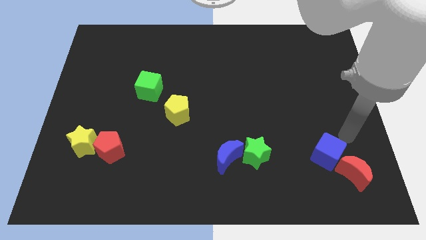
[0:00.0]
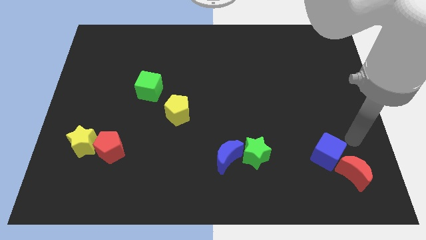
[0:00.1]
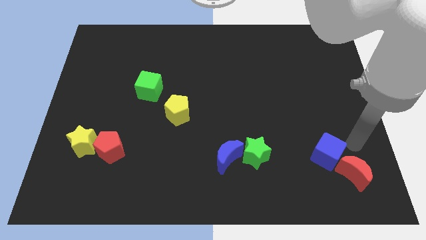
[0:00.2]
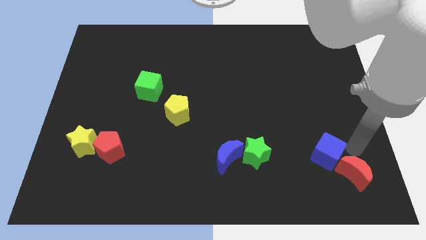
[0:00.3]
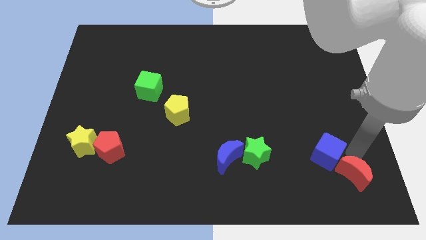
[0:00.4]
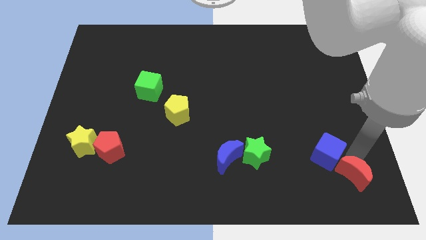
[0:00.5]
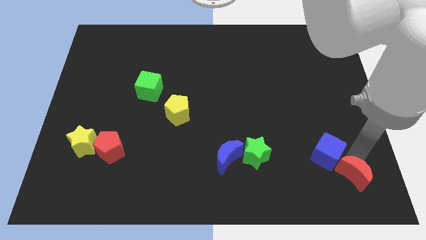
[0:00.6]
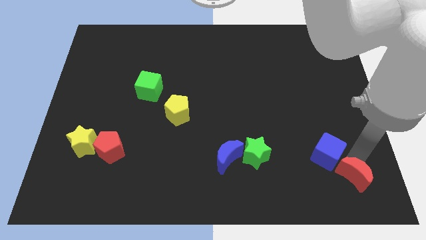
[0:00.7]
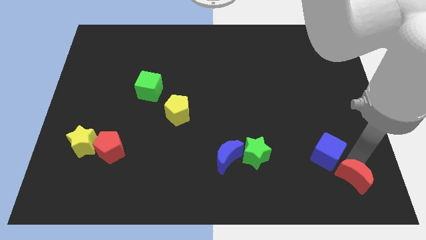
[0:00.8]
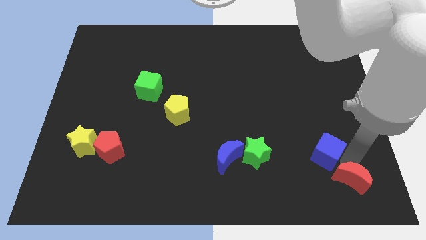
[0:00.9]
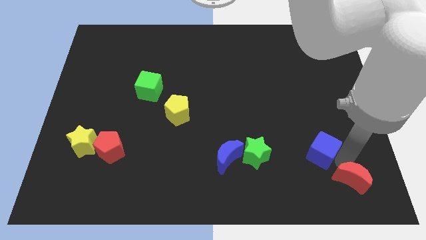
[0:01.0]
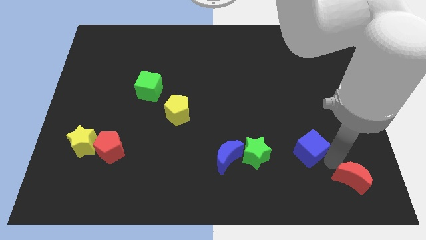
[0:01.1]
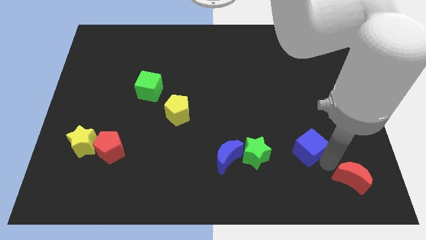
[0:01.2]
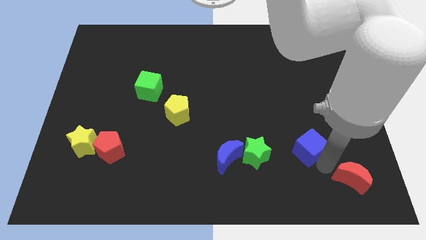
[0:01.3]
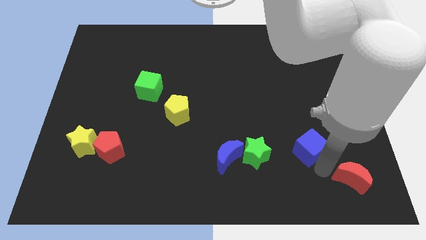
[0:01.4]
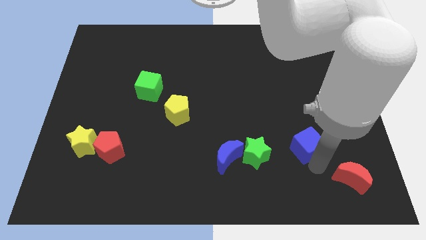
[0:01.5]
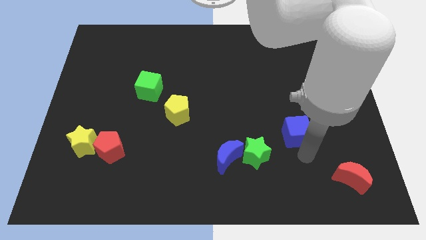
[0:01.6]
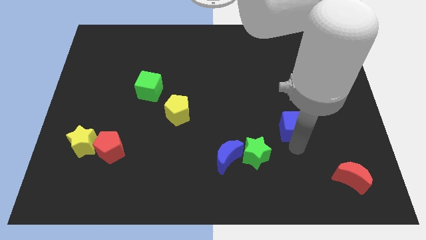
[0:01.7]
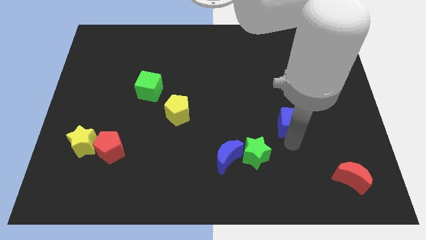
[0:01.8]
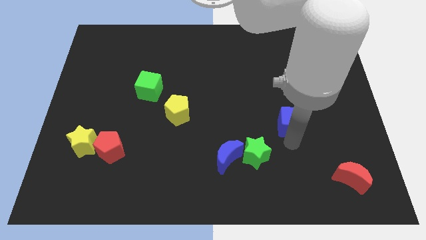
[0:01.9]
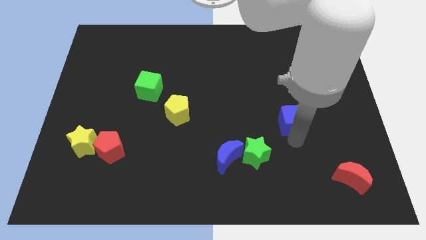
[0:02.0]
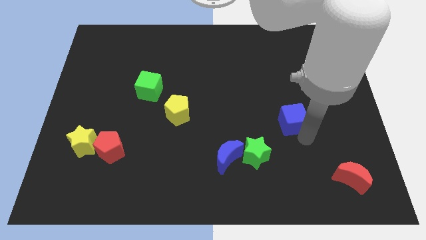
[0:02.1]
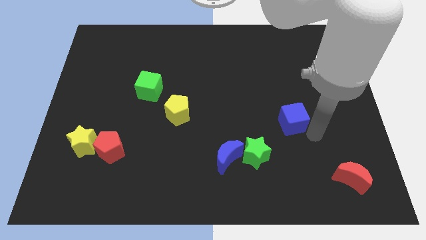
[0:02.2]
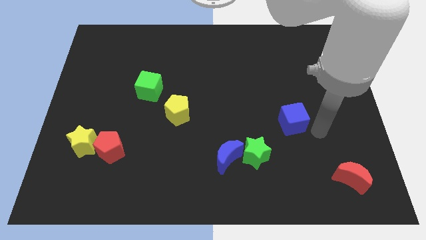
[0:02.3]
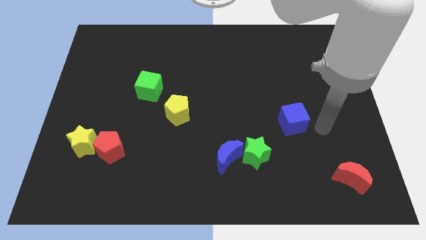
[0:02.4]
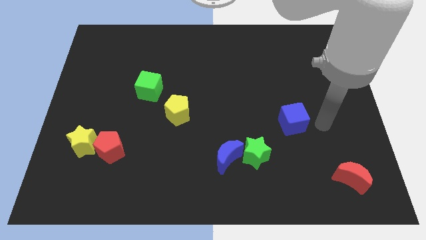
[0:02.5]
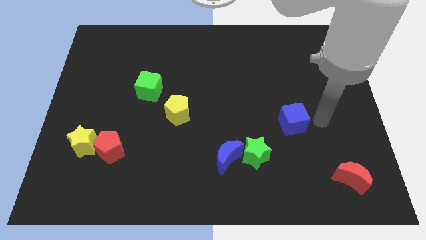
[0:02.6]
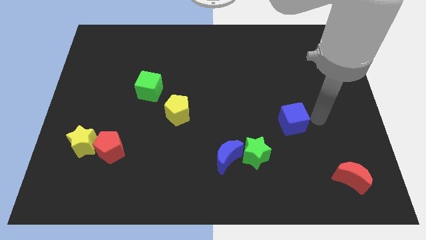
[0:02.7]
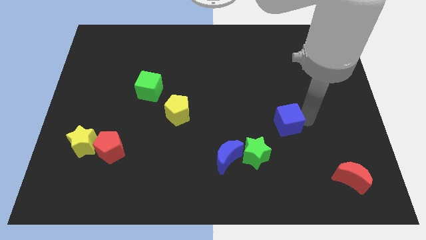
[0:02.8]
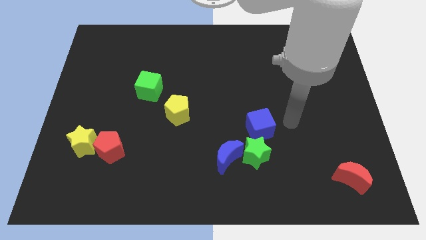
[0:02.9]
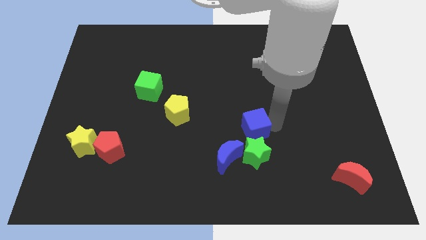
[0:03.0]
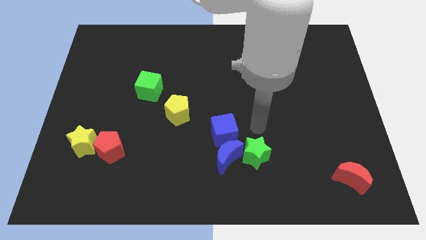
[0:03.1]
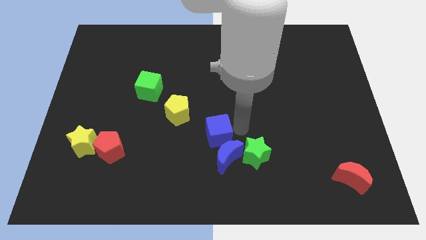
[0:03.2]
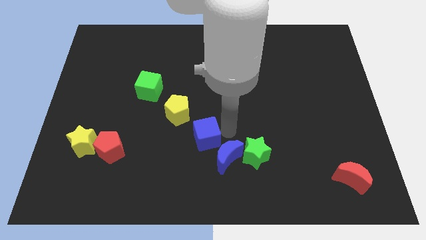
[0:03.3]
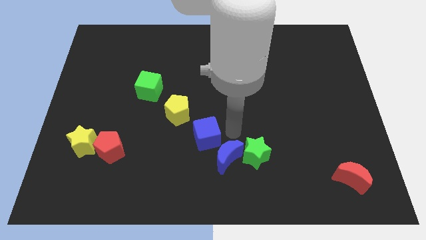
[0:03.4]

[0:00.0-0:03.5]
place the blue cube in between the yellow pentagon and blue moon

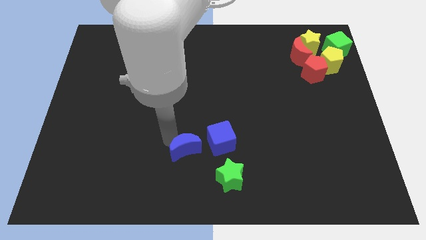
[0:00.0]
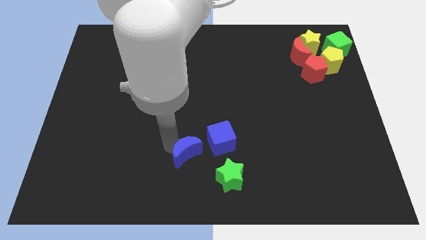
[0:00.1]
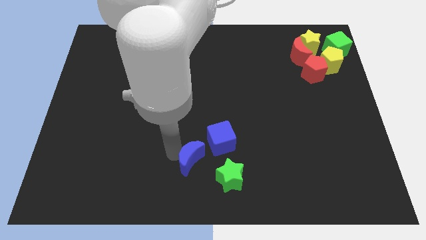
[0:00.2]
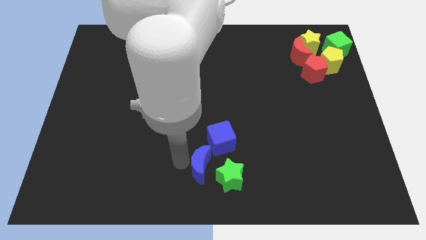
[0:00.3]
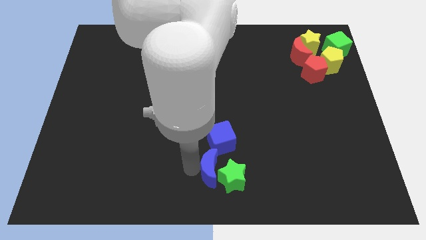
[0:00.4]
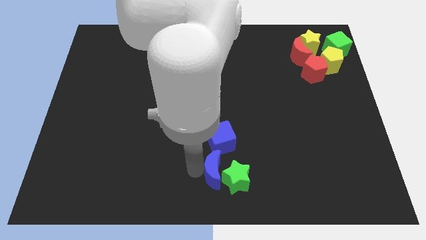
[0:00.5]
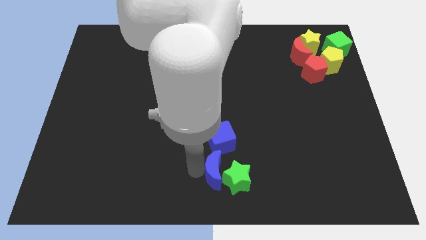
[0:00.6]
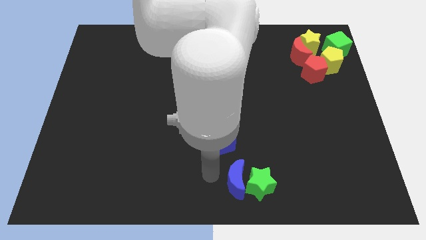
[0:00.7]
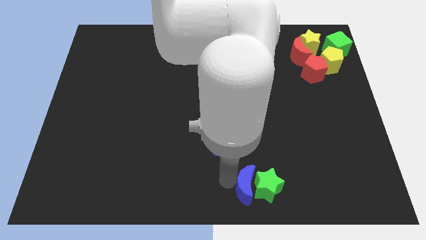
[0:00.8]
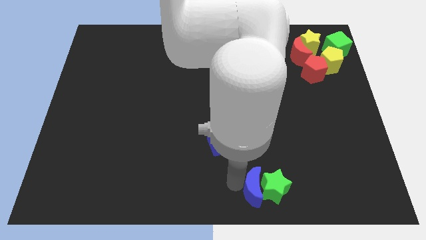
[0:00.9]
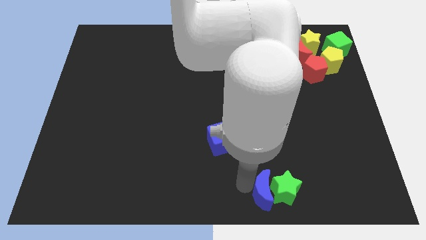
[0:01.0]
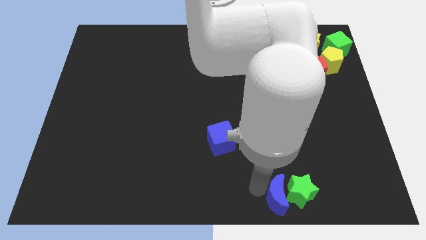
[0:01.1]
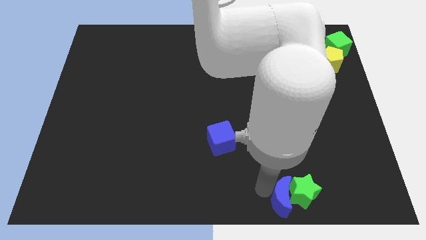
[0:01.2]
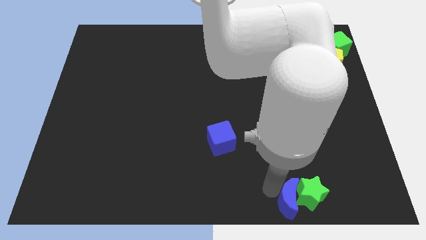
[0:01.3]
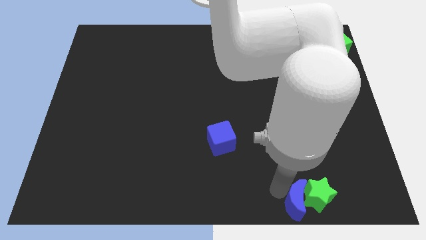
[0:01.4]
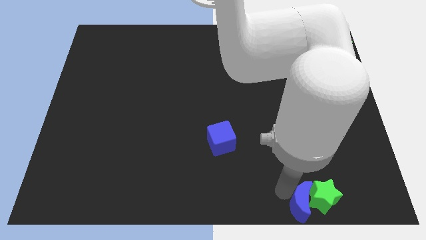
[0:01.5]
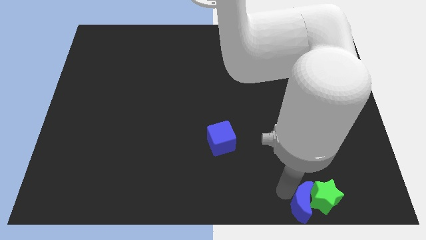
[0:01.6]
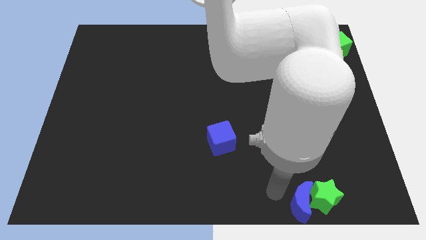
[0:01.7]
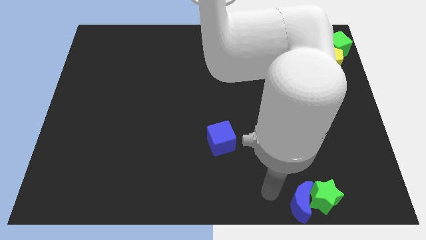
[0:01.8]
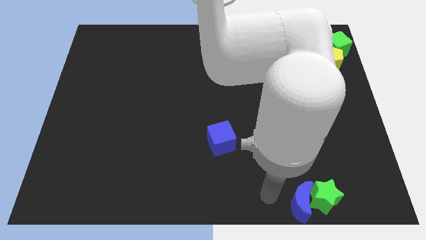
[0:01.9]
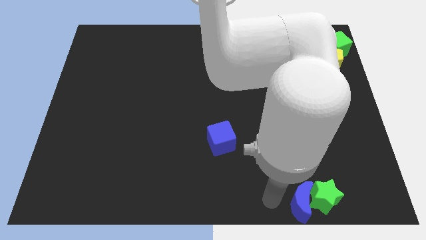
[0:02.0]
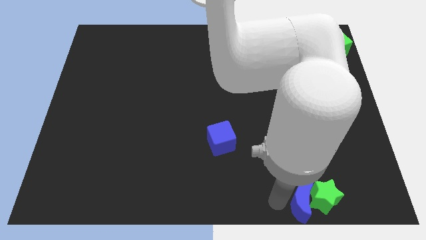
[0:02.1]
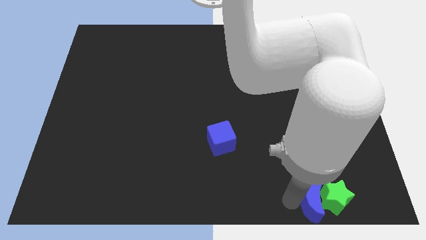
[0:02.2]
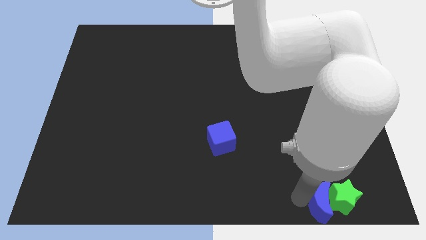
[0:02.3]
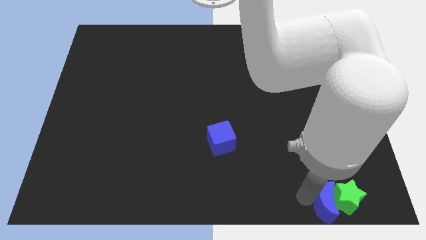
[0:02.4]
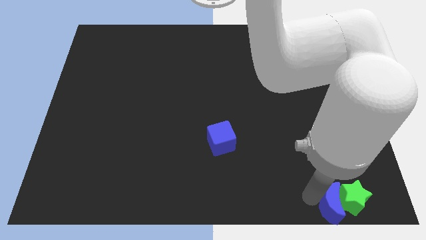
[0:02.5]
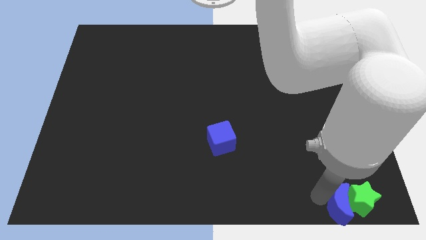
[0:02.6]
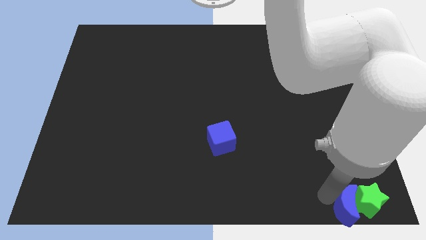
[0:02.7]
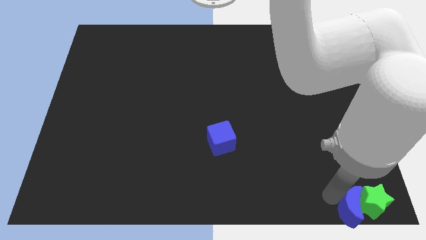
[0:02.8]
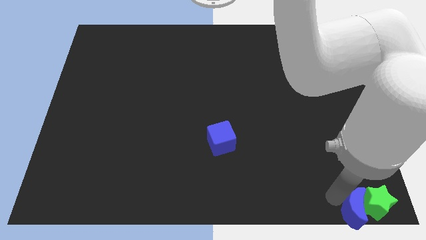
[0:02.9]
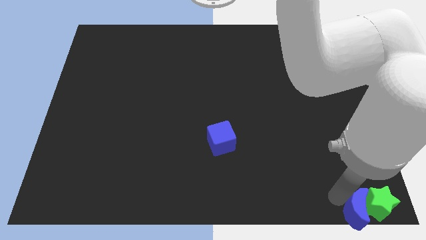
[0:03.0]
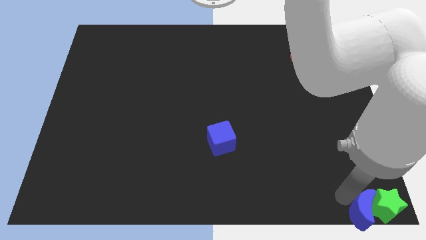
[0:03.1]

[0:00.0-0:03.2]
slide blue moon and the green star towards bottom right

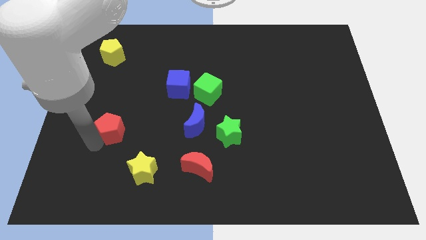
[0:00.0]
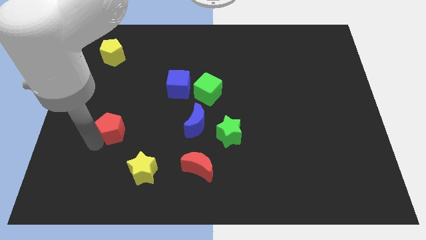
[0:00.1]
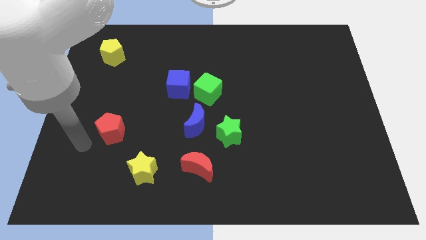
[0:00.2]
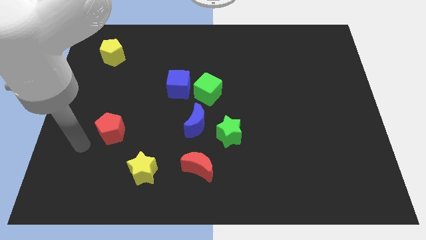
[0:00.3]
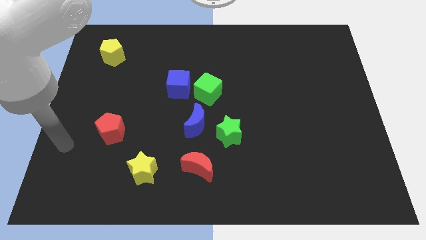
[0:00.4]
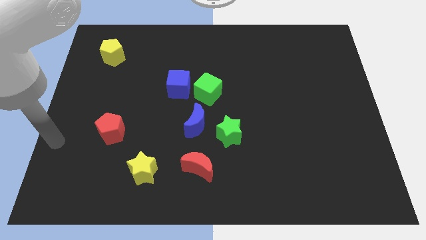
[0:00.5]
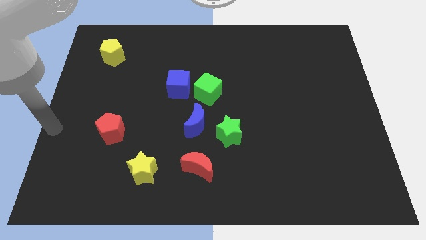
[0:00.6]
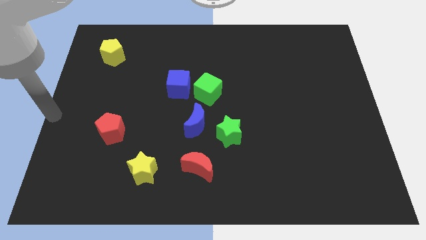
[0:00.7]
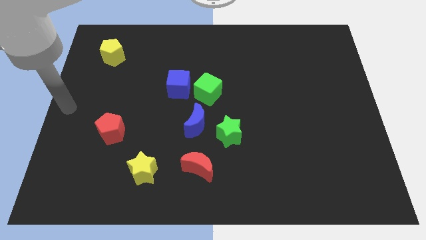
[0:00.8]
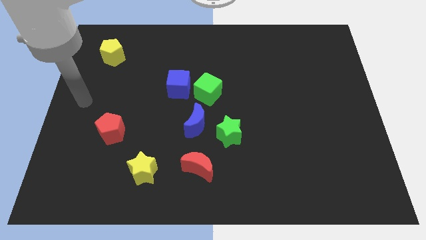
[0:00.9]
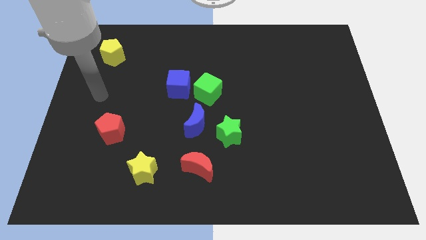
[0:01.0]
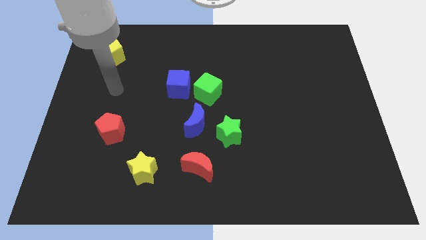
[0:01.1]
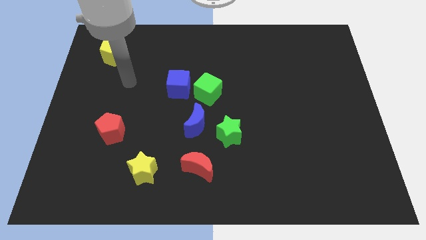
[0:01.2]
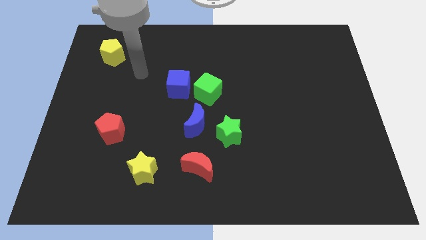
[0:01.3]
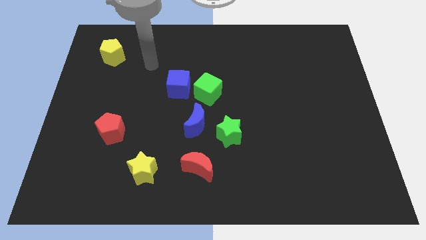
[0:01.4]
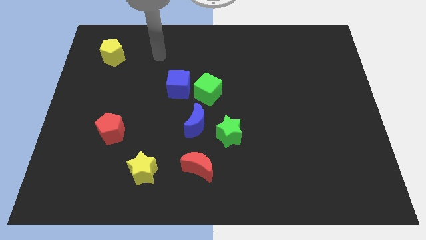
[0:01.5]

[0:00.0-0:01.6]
go away from the red pentagon

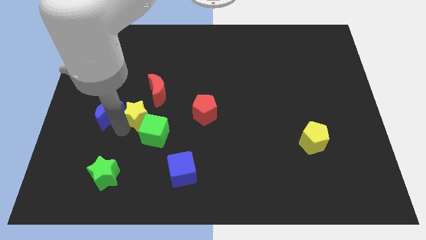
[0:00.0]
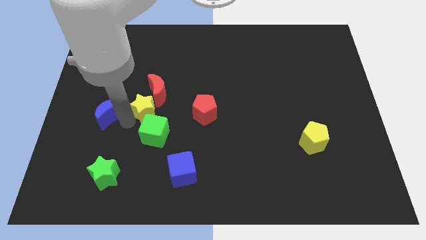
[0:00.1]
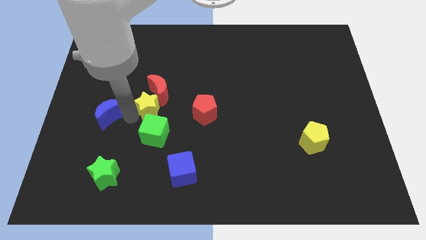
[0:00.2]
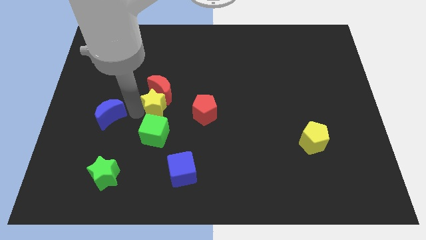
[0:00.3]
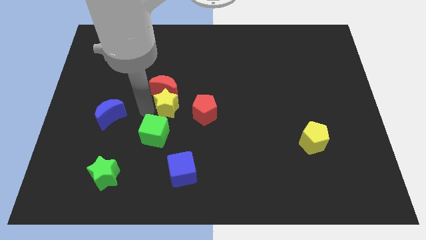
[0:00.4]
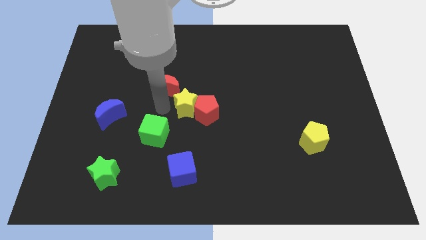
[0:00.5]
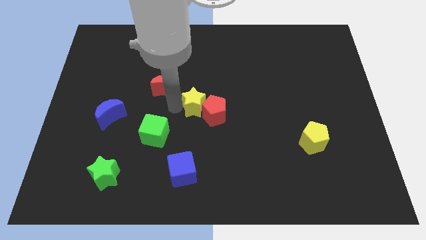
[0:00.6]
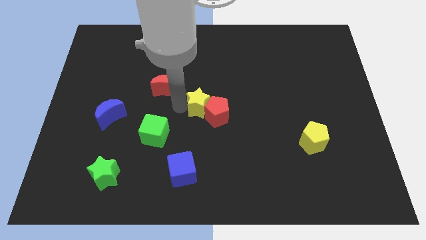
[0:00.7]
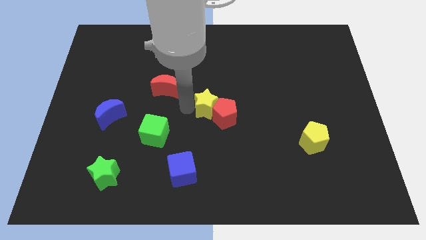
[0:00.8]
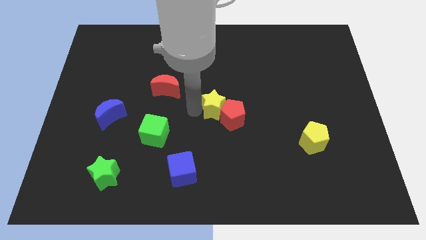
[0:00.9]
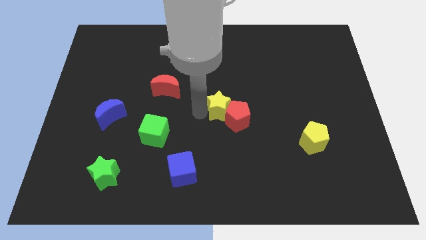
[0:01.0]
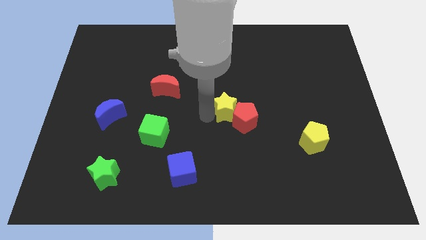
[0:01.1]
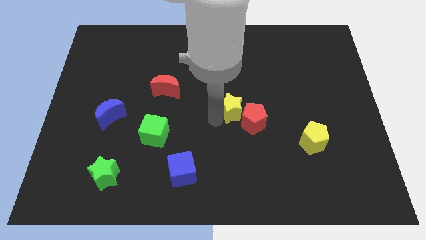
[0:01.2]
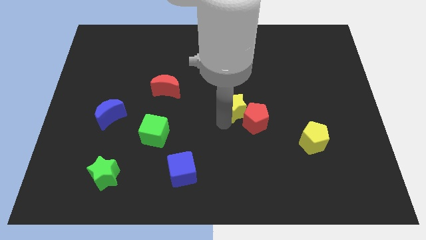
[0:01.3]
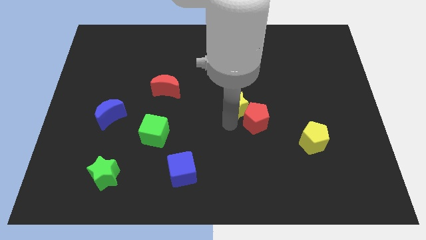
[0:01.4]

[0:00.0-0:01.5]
move the yellow star into the red pentagon
